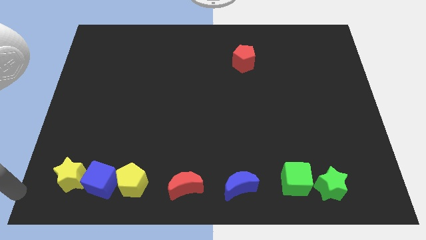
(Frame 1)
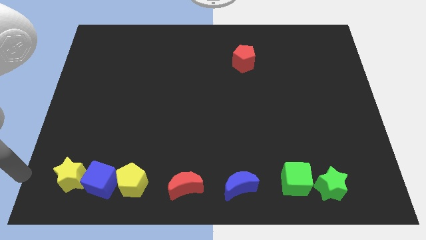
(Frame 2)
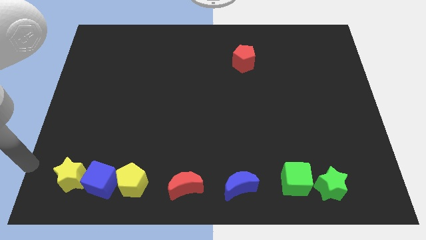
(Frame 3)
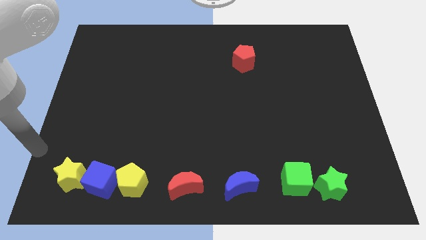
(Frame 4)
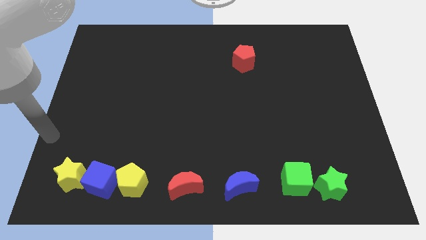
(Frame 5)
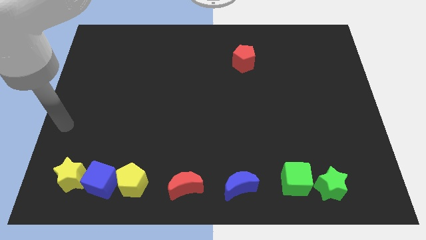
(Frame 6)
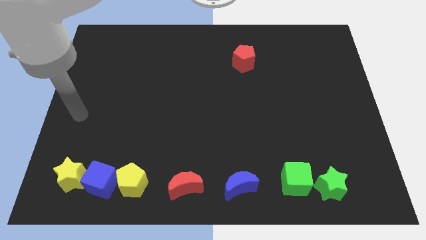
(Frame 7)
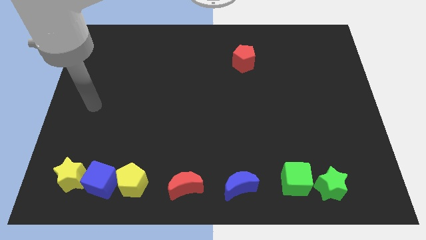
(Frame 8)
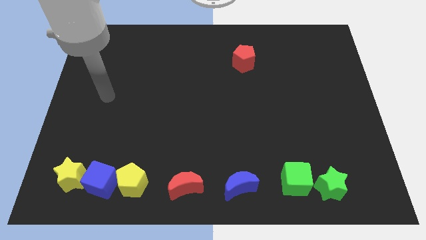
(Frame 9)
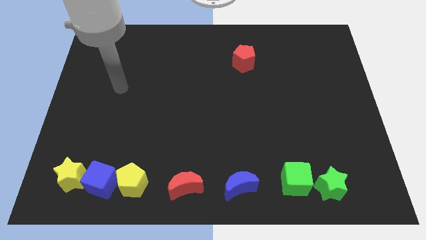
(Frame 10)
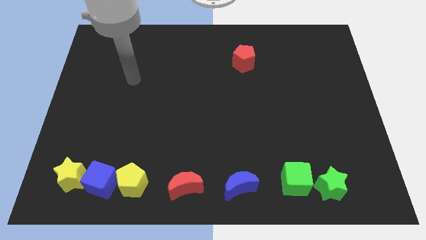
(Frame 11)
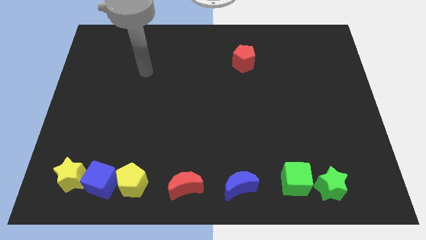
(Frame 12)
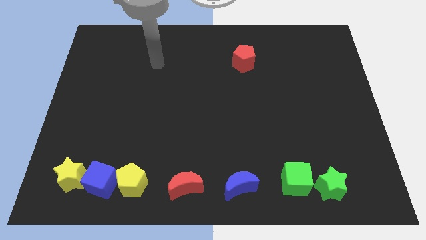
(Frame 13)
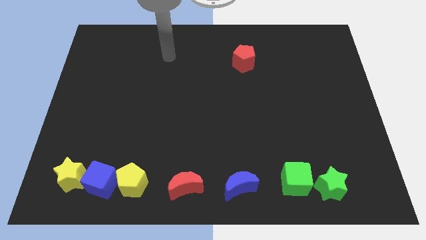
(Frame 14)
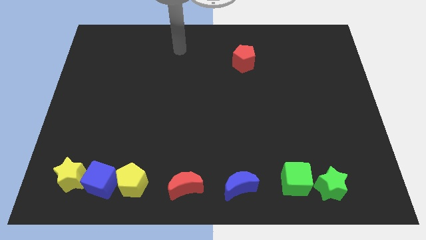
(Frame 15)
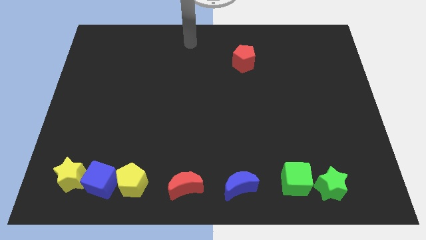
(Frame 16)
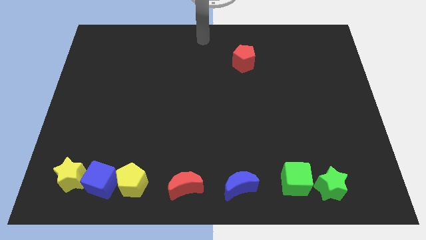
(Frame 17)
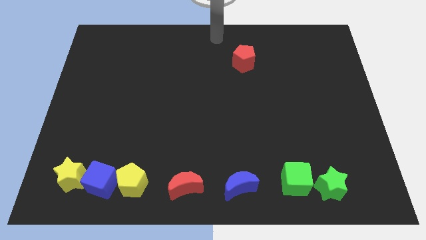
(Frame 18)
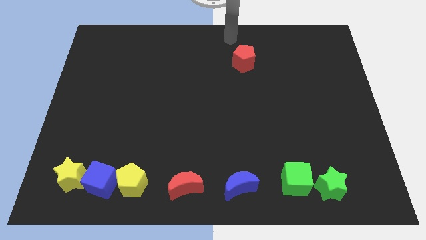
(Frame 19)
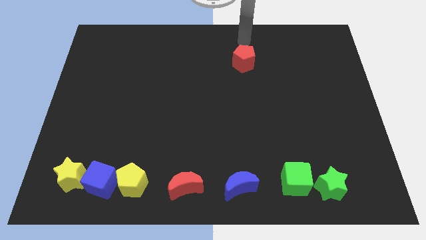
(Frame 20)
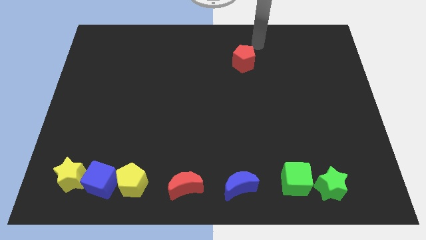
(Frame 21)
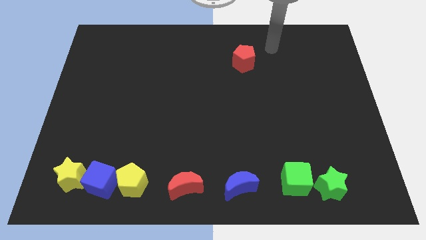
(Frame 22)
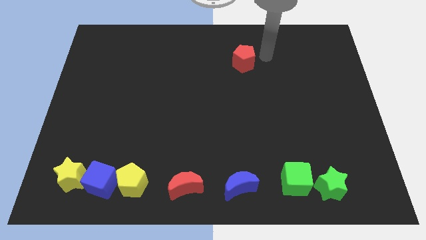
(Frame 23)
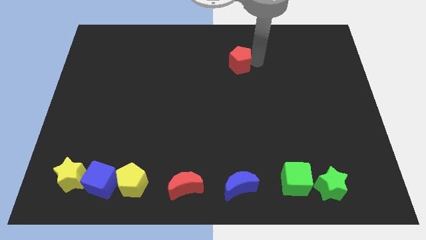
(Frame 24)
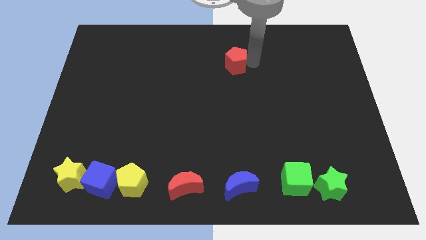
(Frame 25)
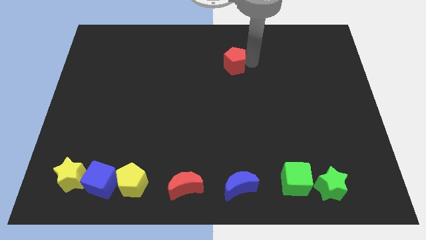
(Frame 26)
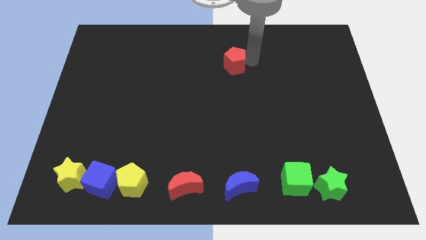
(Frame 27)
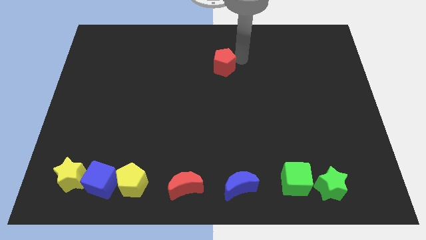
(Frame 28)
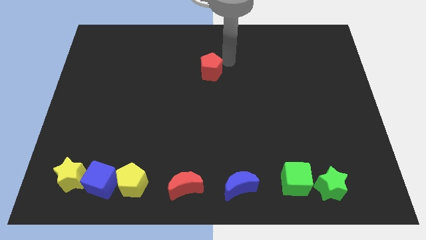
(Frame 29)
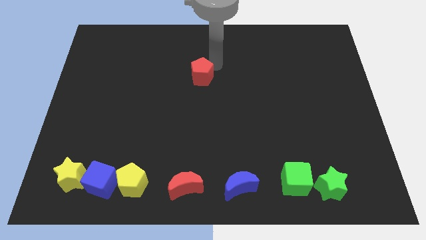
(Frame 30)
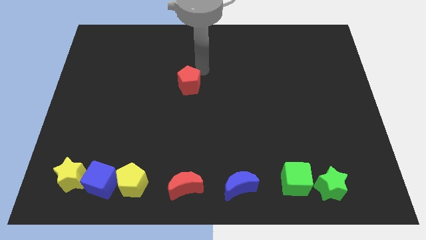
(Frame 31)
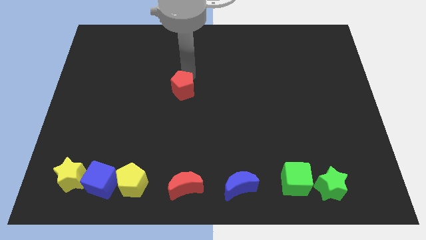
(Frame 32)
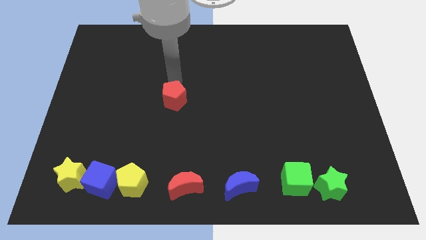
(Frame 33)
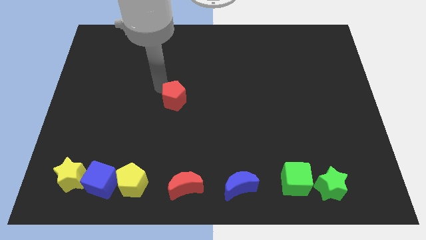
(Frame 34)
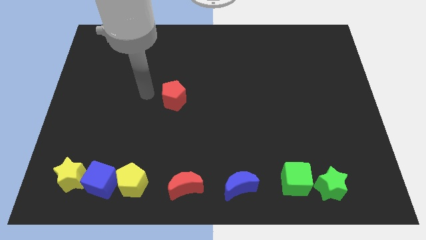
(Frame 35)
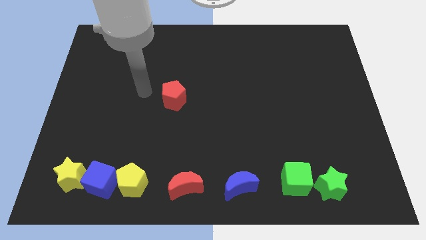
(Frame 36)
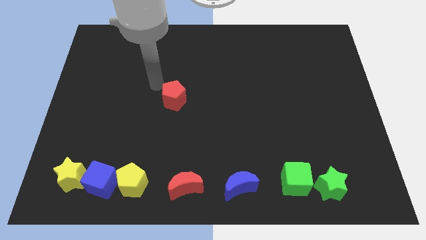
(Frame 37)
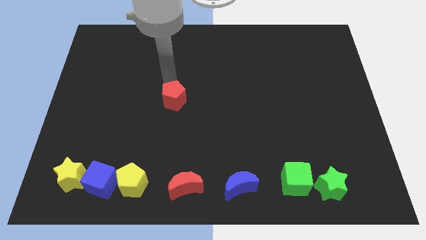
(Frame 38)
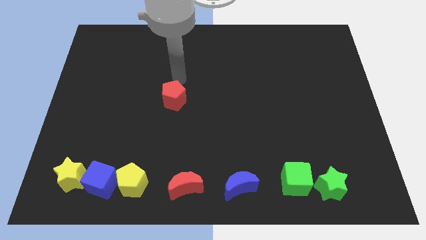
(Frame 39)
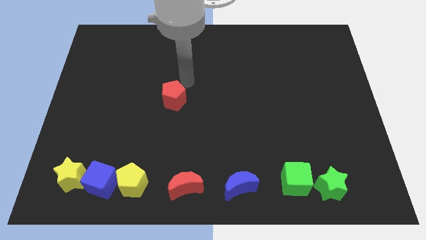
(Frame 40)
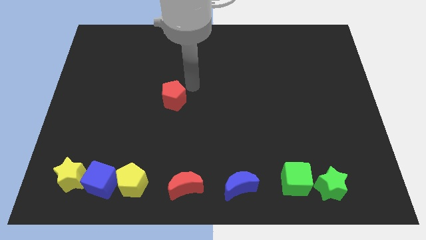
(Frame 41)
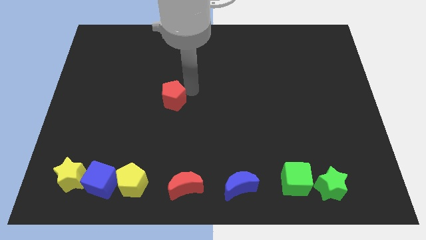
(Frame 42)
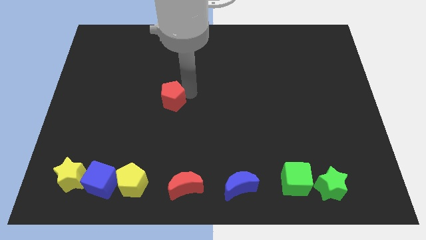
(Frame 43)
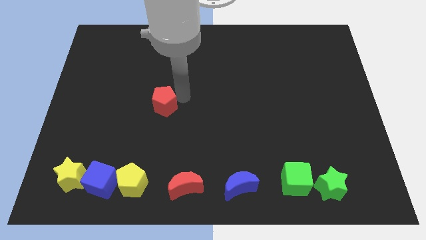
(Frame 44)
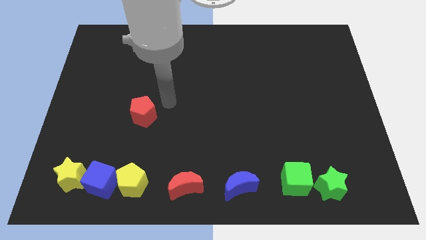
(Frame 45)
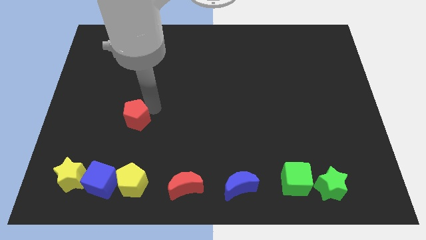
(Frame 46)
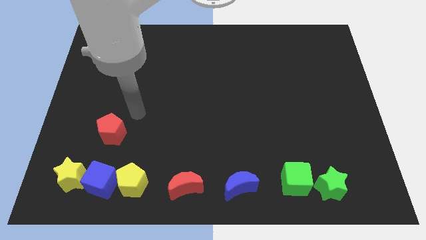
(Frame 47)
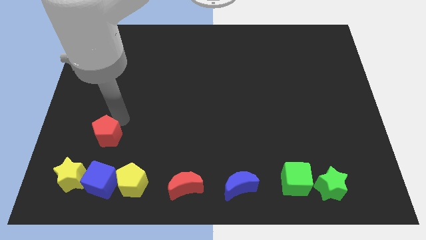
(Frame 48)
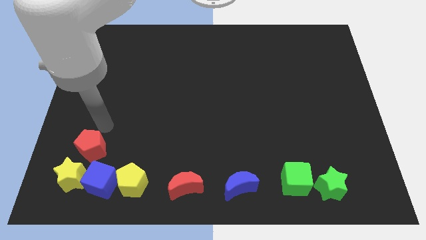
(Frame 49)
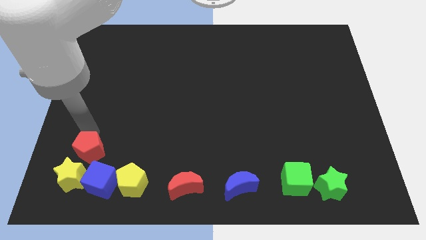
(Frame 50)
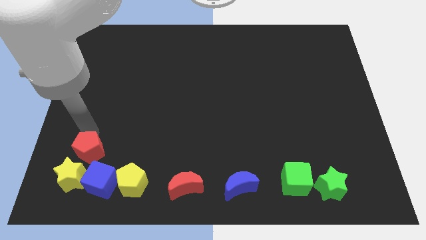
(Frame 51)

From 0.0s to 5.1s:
push red pentagon towards yellow star

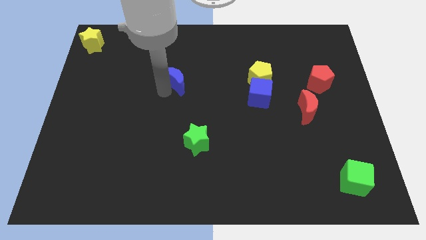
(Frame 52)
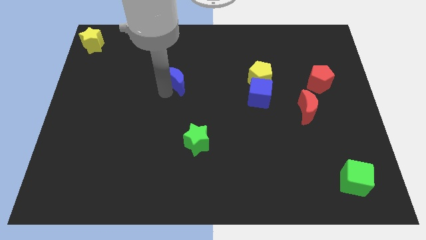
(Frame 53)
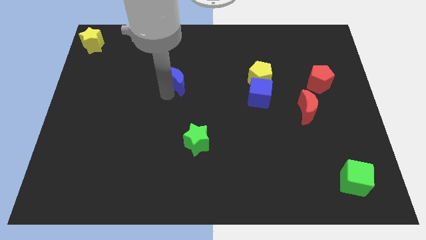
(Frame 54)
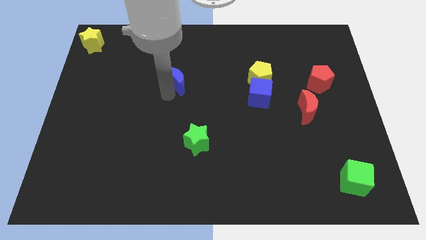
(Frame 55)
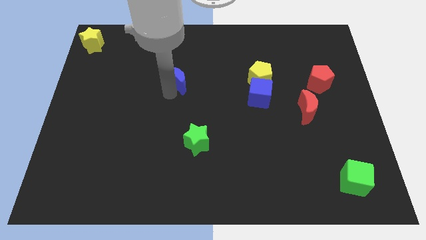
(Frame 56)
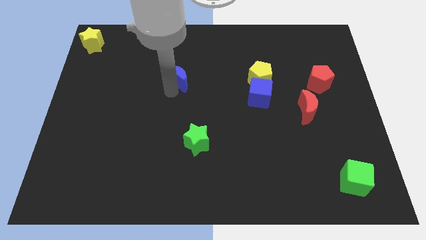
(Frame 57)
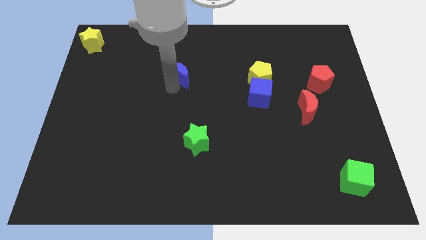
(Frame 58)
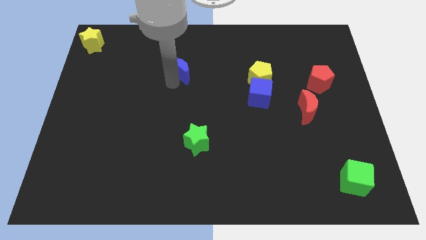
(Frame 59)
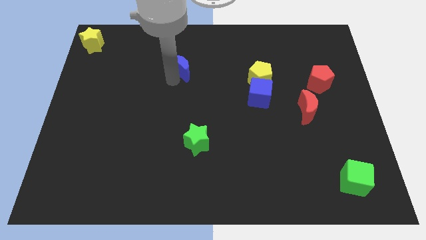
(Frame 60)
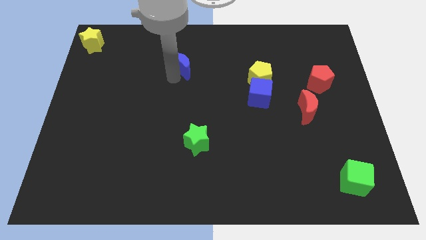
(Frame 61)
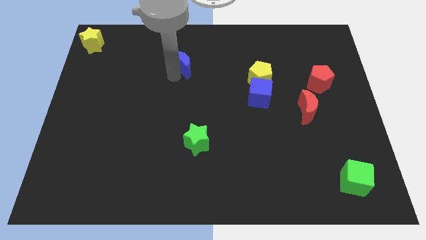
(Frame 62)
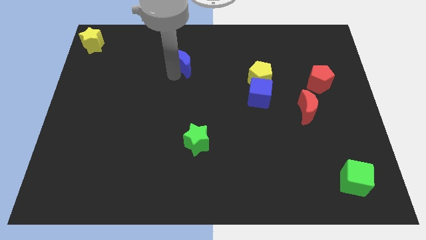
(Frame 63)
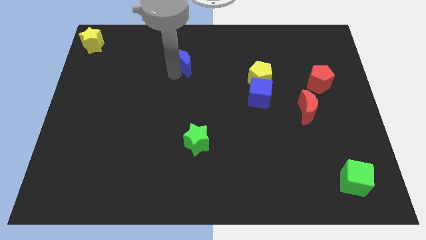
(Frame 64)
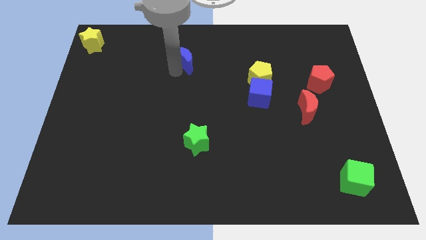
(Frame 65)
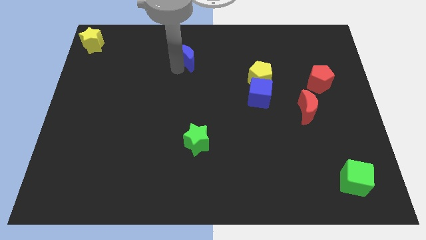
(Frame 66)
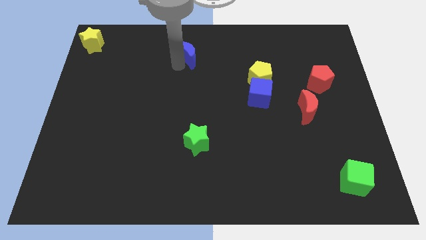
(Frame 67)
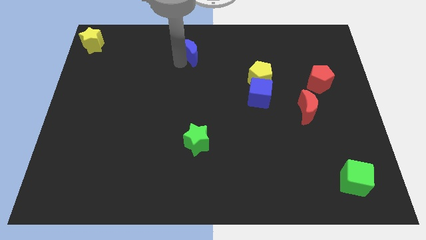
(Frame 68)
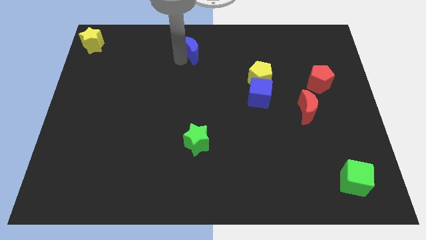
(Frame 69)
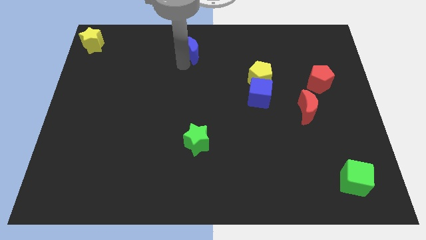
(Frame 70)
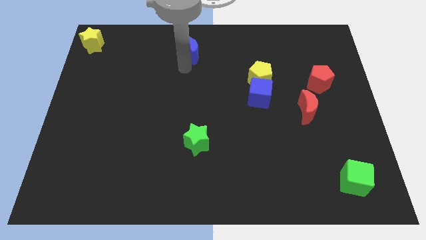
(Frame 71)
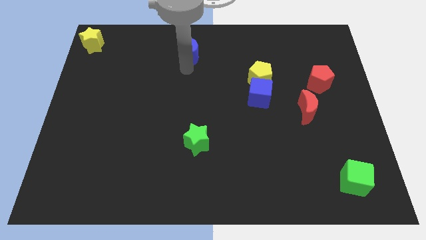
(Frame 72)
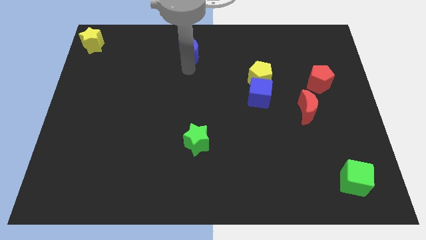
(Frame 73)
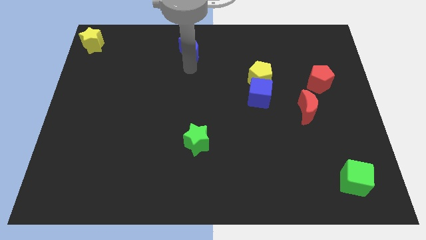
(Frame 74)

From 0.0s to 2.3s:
push the blue crescent to the right of the yellow star

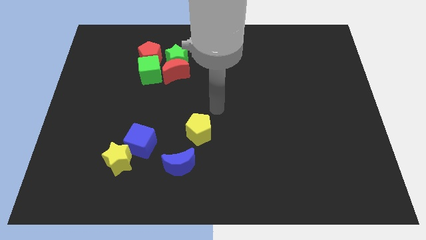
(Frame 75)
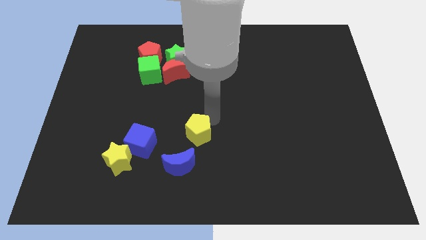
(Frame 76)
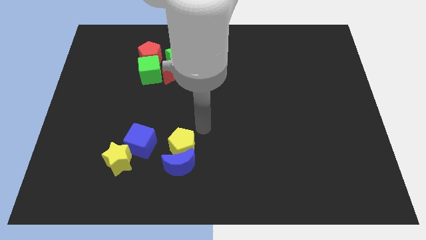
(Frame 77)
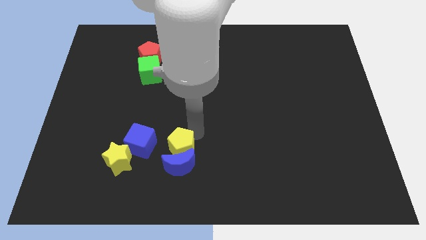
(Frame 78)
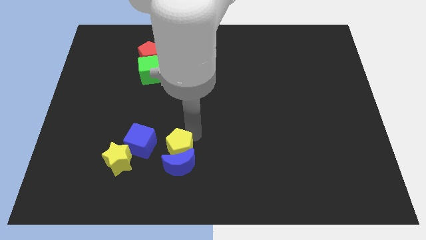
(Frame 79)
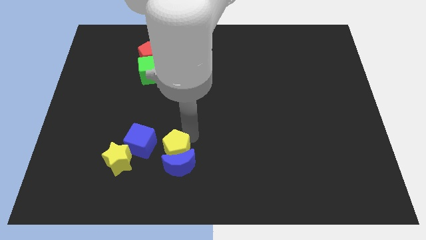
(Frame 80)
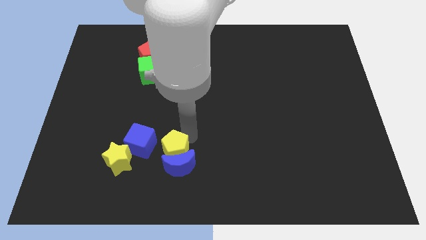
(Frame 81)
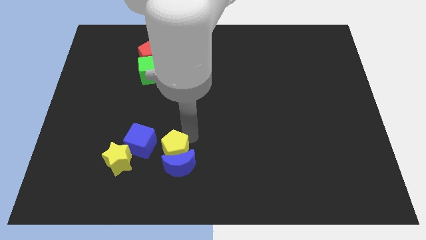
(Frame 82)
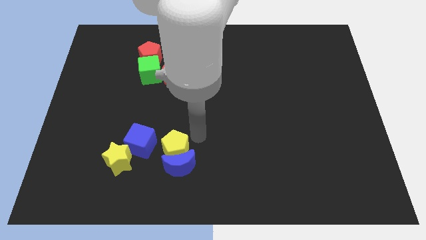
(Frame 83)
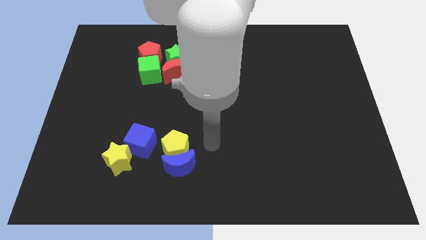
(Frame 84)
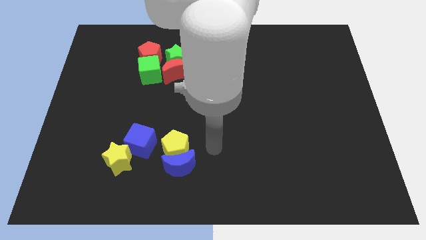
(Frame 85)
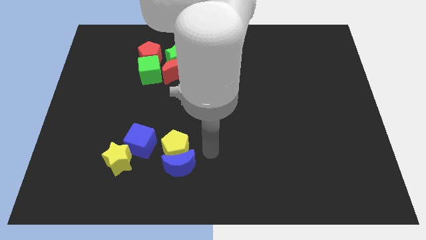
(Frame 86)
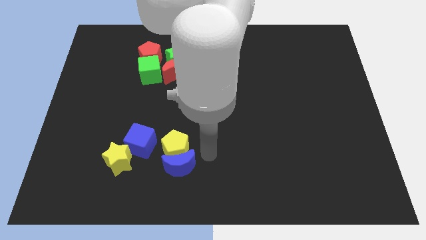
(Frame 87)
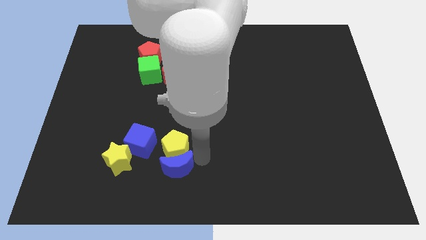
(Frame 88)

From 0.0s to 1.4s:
push the yellow pentagon to the top of the blue moon

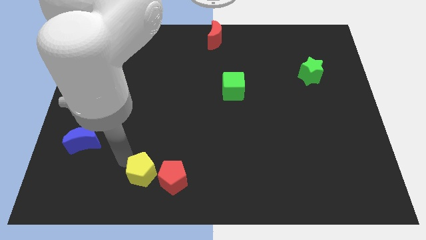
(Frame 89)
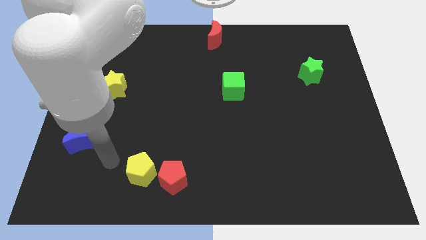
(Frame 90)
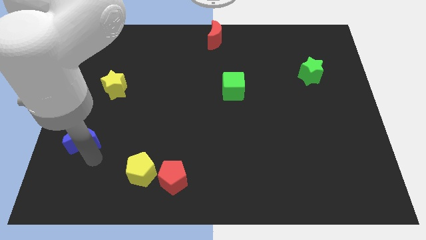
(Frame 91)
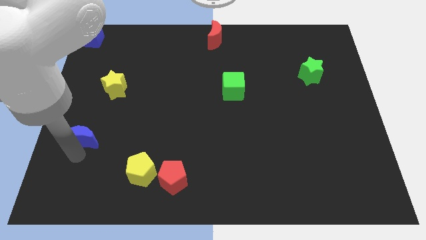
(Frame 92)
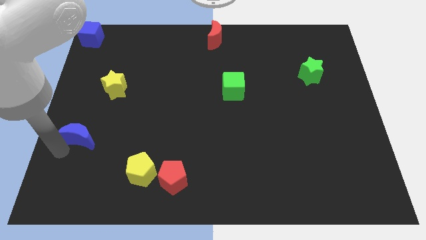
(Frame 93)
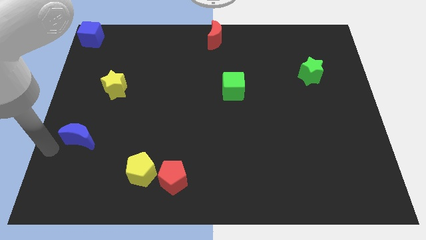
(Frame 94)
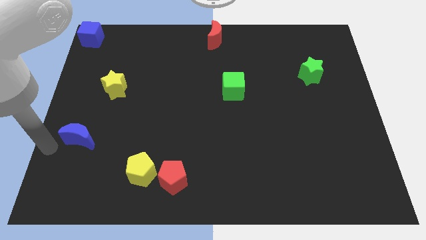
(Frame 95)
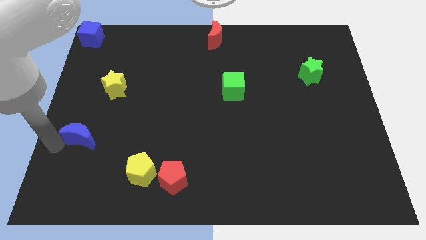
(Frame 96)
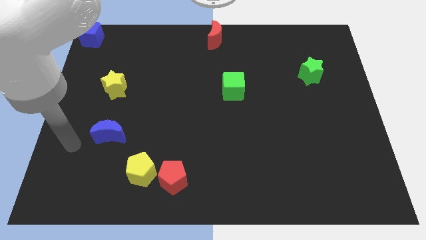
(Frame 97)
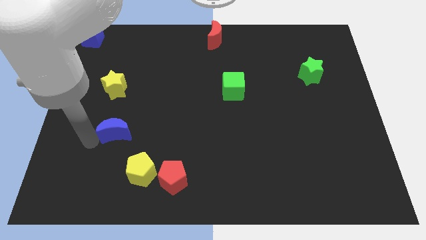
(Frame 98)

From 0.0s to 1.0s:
push the blue crescent towards the right side of the board
